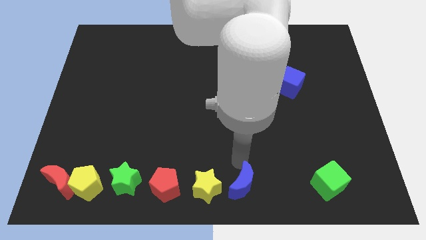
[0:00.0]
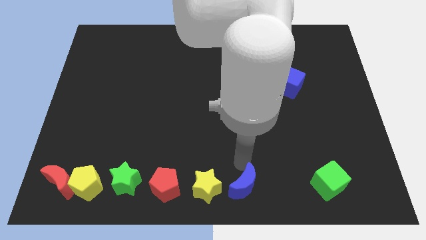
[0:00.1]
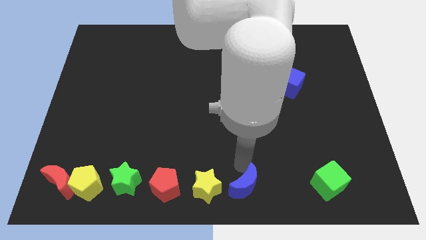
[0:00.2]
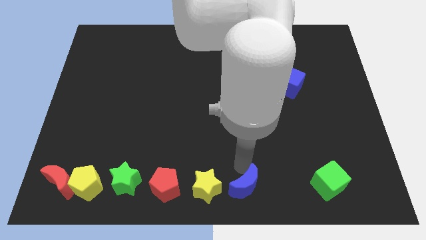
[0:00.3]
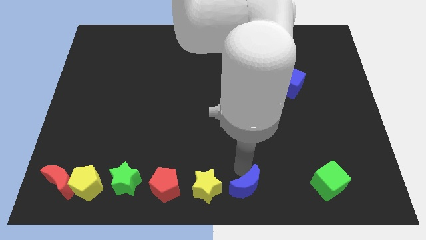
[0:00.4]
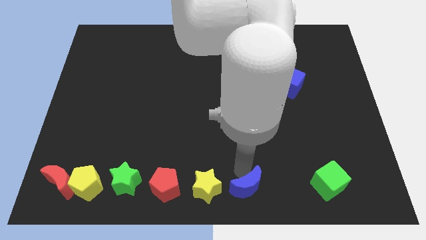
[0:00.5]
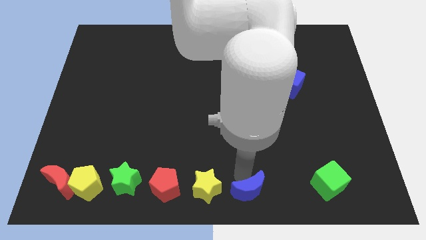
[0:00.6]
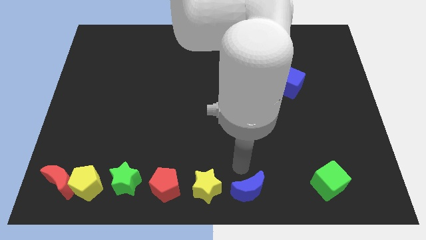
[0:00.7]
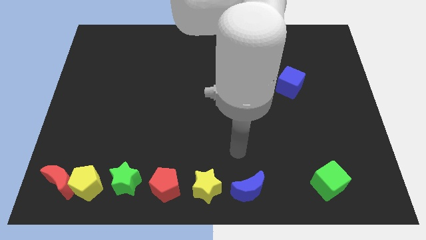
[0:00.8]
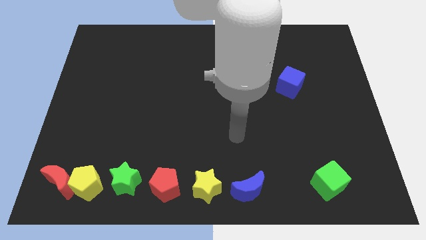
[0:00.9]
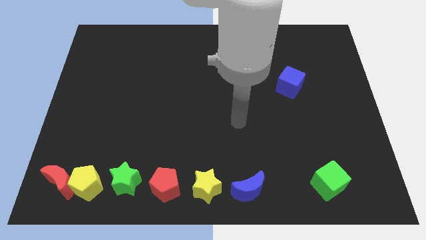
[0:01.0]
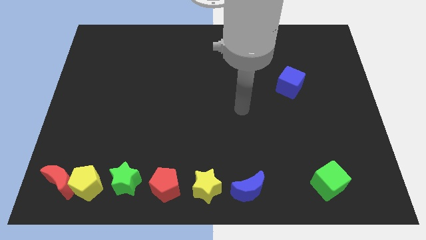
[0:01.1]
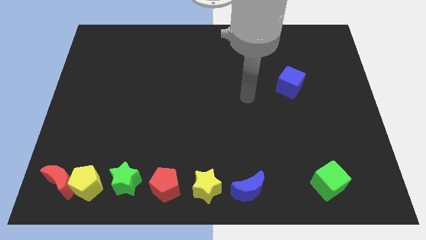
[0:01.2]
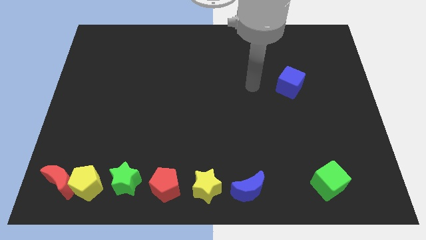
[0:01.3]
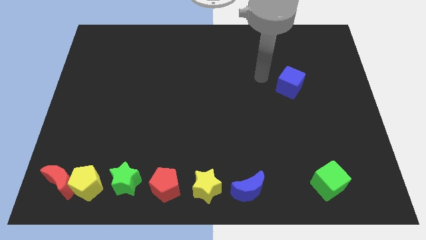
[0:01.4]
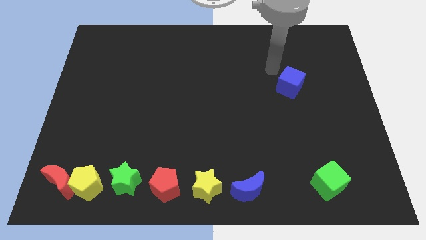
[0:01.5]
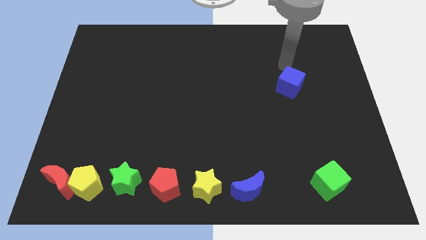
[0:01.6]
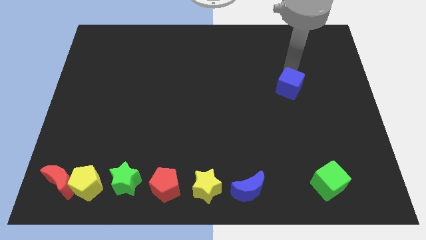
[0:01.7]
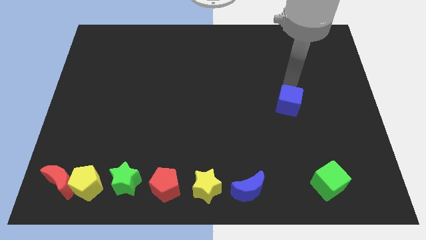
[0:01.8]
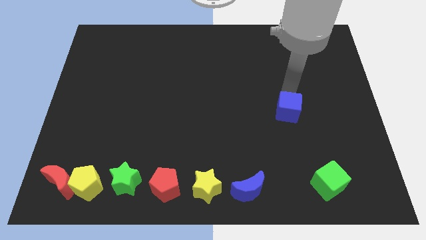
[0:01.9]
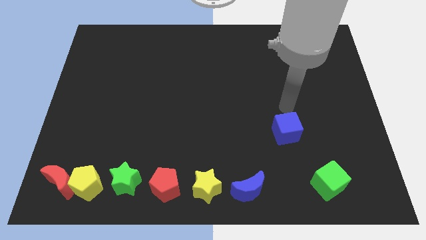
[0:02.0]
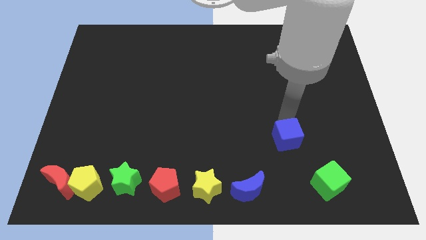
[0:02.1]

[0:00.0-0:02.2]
place the blue cube diagonally to the top right of the blue moon

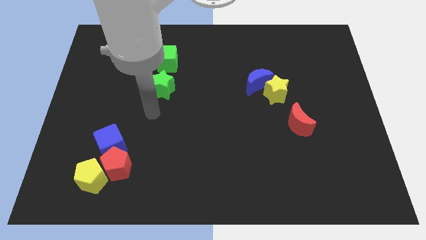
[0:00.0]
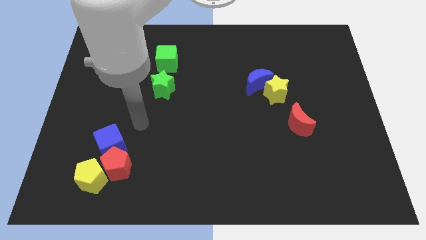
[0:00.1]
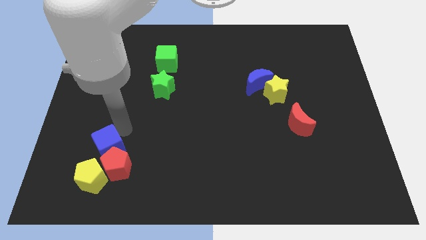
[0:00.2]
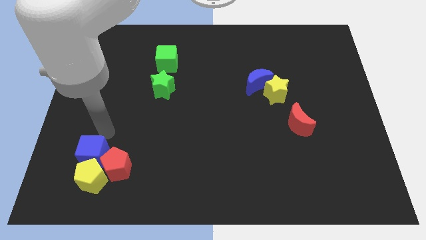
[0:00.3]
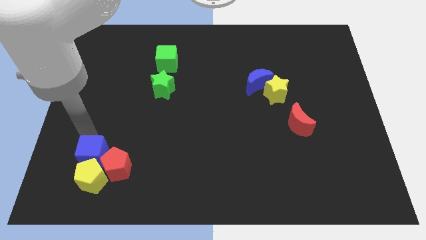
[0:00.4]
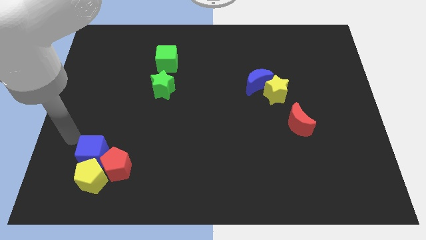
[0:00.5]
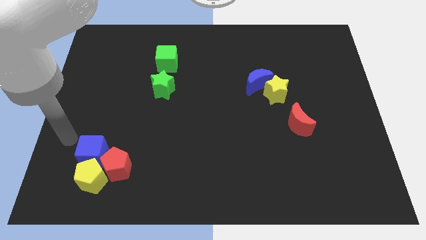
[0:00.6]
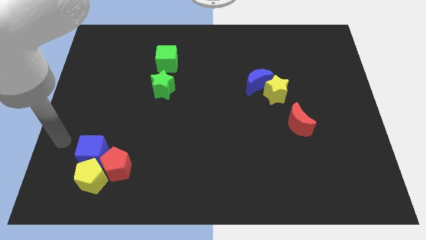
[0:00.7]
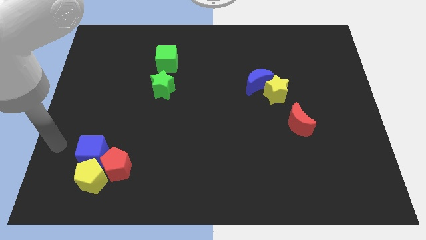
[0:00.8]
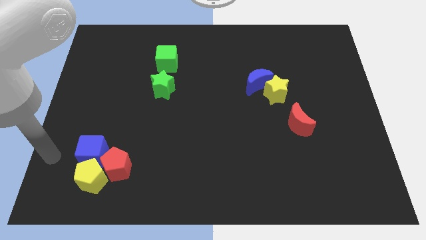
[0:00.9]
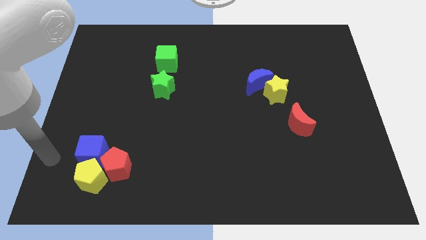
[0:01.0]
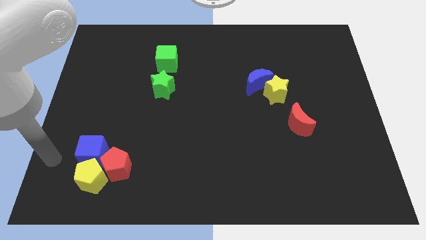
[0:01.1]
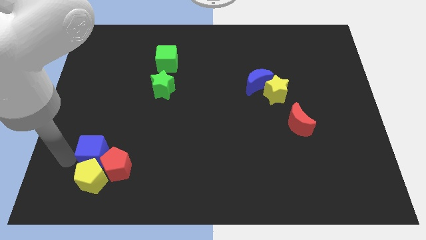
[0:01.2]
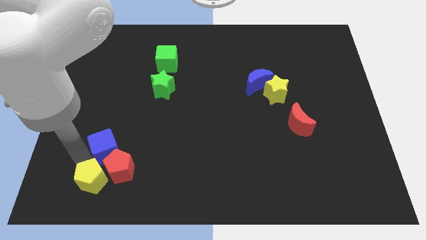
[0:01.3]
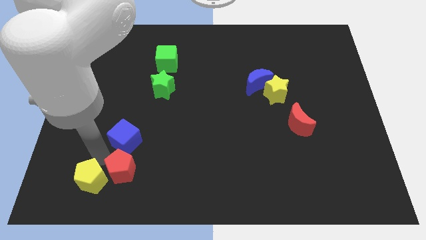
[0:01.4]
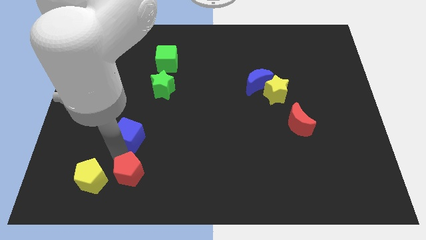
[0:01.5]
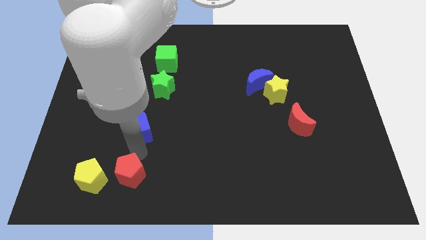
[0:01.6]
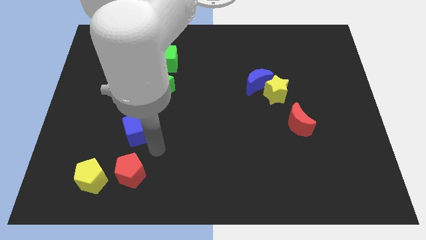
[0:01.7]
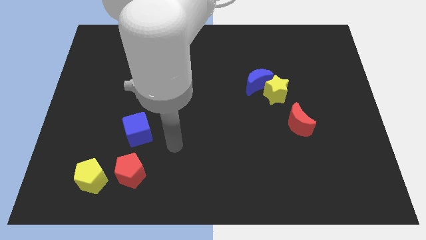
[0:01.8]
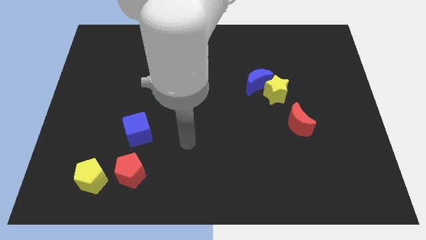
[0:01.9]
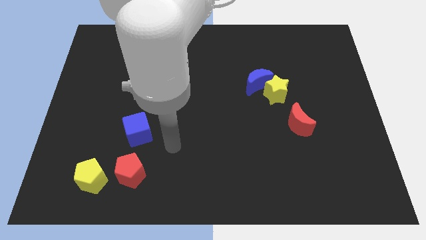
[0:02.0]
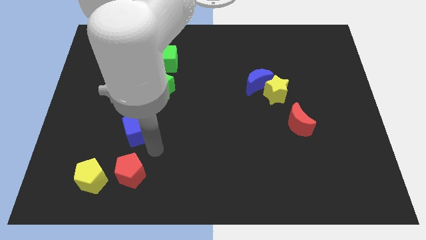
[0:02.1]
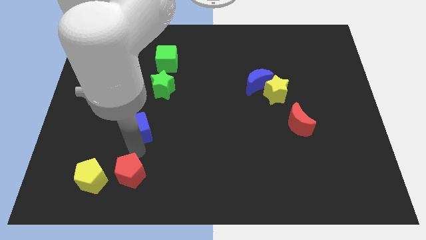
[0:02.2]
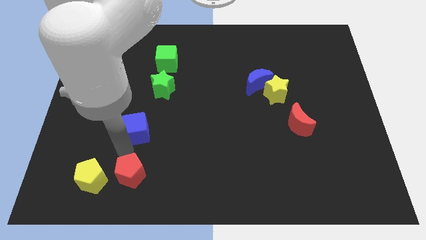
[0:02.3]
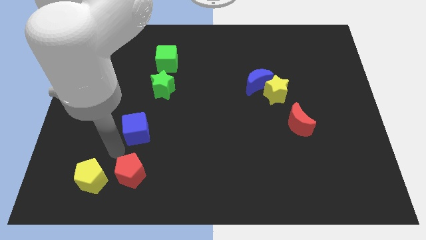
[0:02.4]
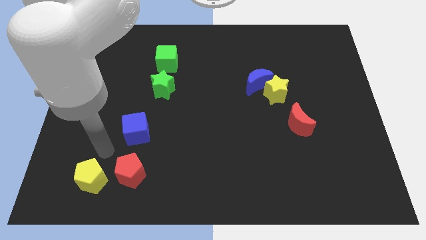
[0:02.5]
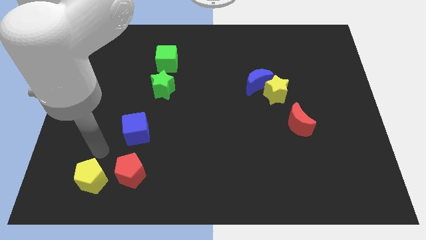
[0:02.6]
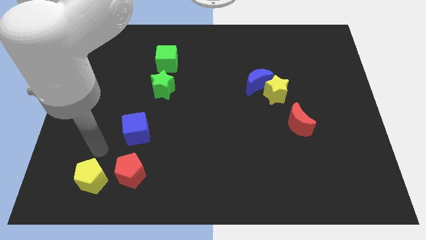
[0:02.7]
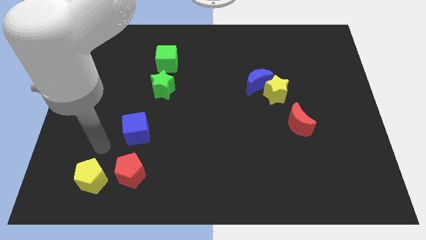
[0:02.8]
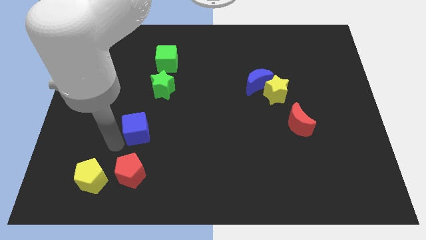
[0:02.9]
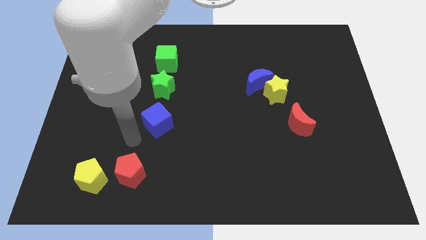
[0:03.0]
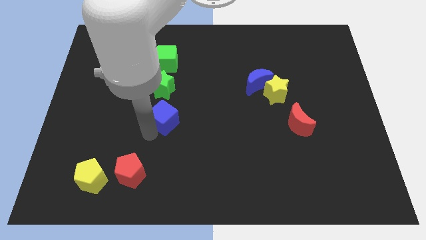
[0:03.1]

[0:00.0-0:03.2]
separate blue cube from the red pentagon

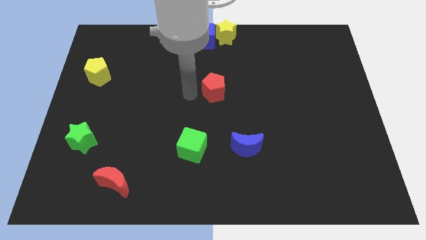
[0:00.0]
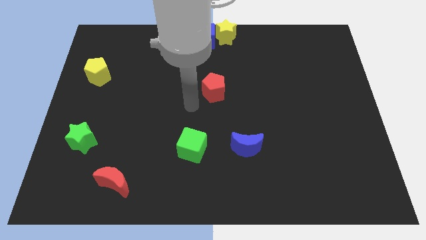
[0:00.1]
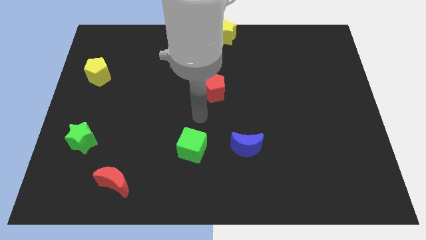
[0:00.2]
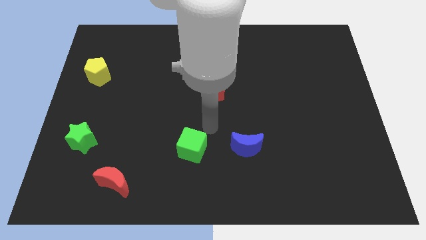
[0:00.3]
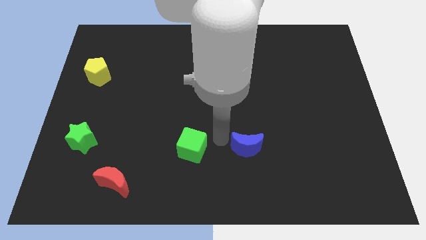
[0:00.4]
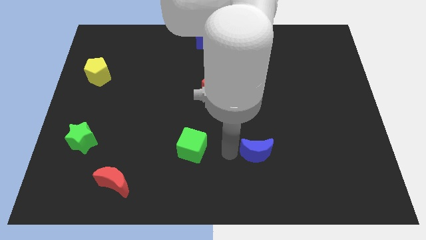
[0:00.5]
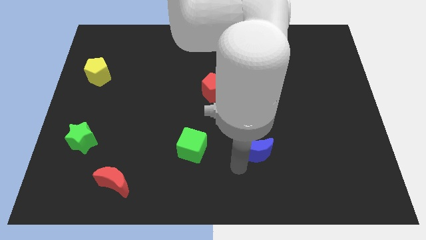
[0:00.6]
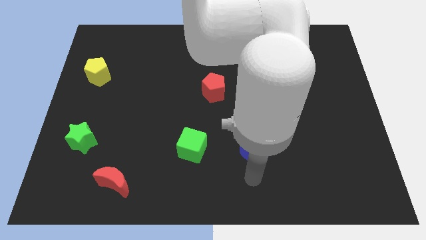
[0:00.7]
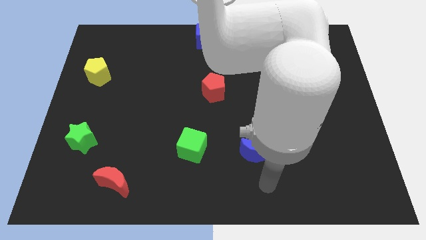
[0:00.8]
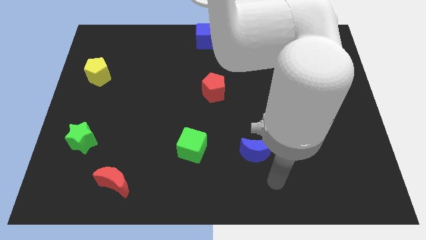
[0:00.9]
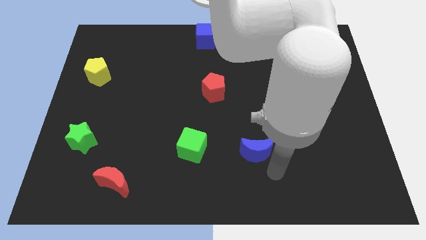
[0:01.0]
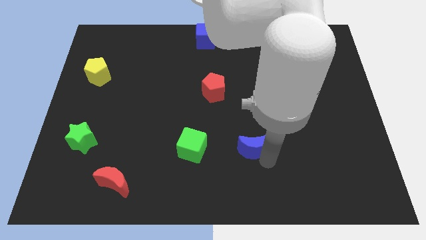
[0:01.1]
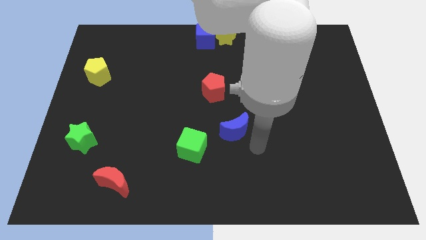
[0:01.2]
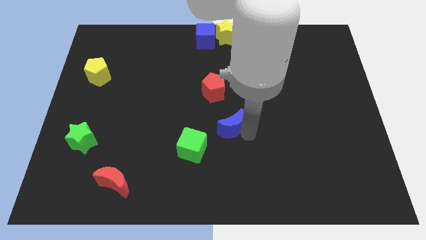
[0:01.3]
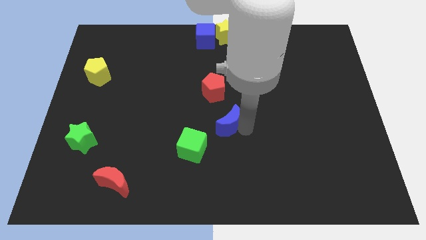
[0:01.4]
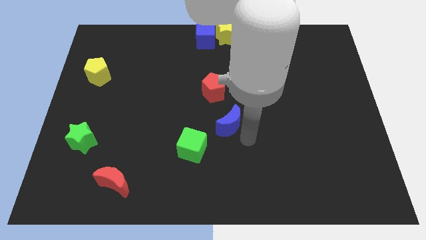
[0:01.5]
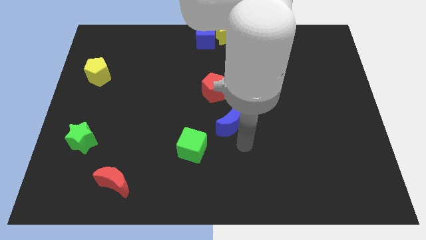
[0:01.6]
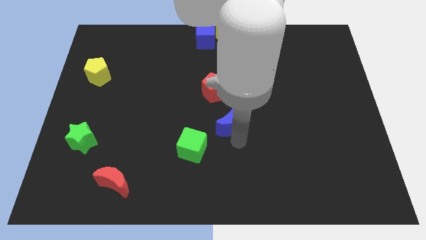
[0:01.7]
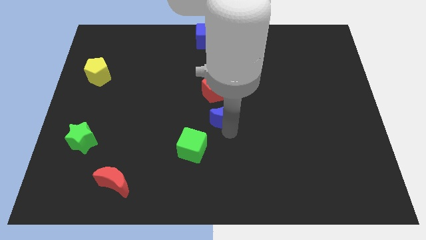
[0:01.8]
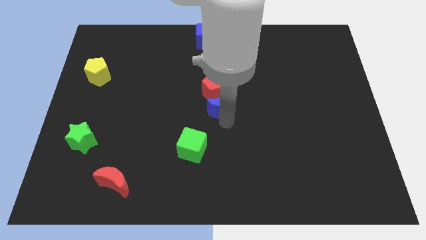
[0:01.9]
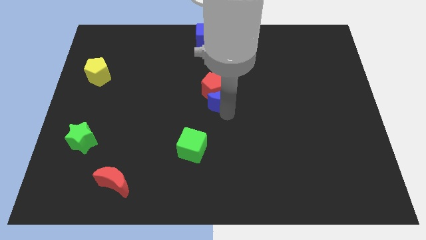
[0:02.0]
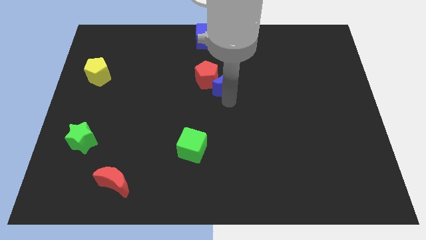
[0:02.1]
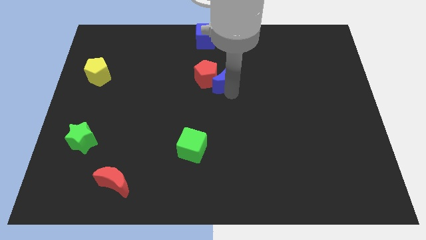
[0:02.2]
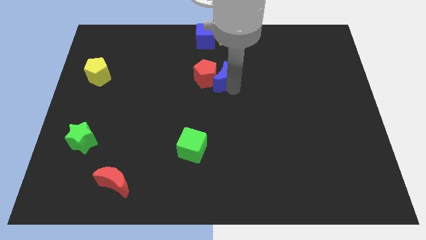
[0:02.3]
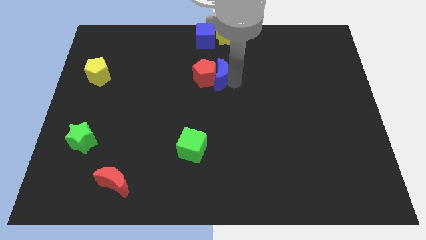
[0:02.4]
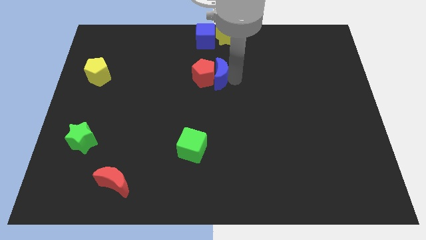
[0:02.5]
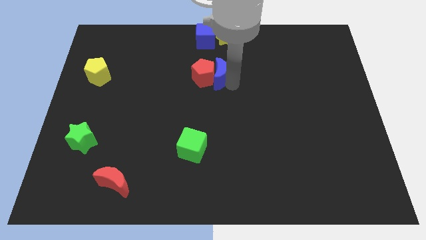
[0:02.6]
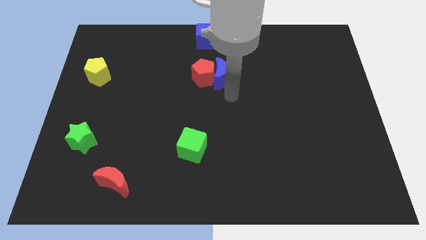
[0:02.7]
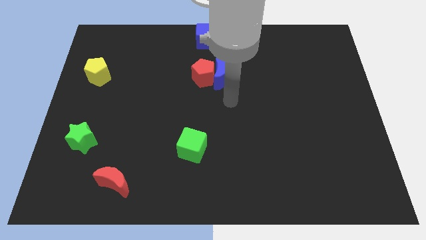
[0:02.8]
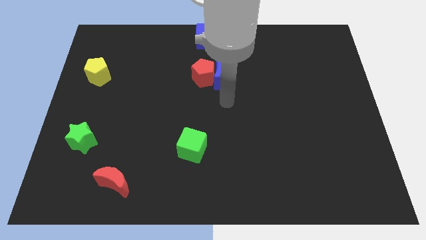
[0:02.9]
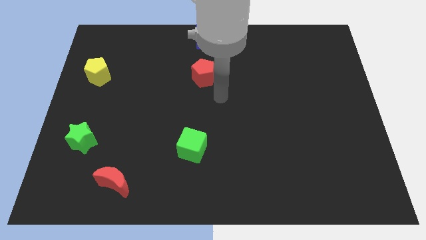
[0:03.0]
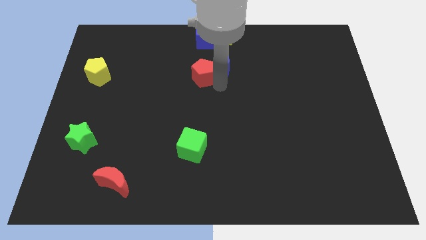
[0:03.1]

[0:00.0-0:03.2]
push the blue moon into the red pentagon

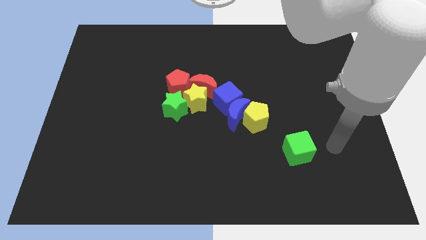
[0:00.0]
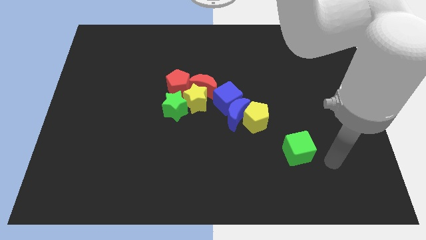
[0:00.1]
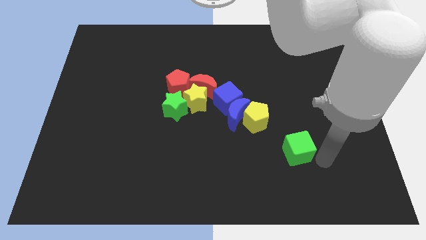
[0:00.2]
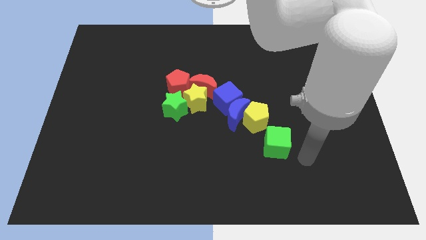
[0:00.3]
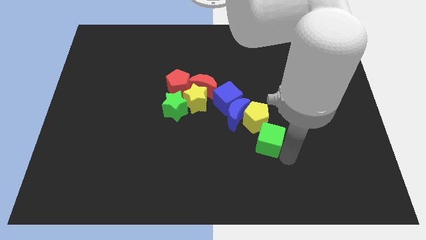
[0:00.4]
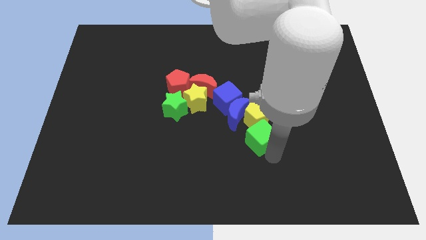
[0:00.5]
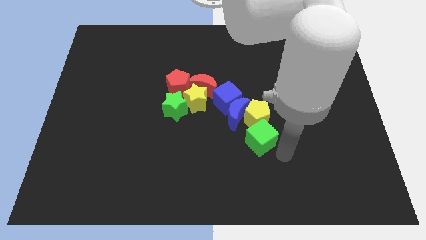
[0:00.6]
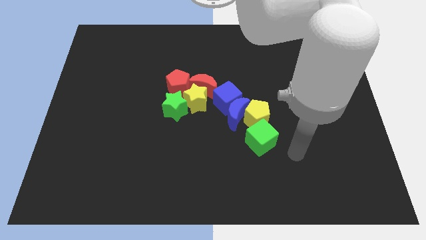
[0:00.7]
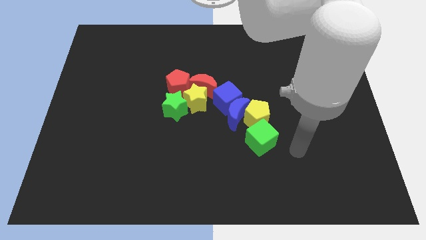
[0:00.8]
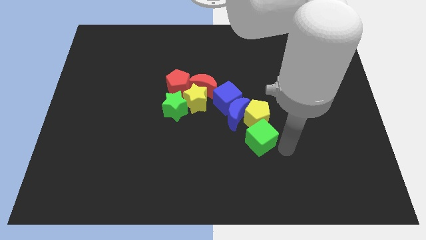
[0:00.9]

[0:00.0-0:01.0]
move the green cube into the yellow pentagon
